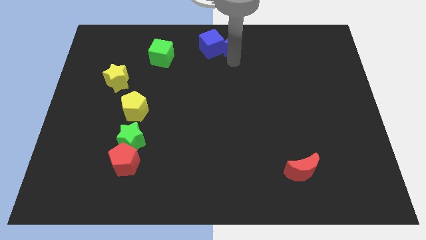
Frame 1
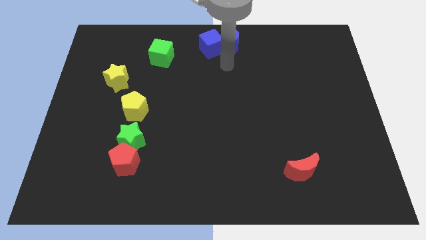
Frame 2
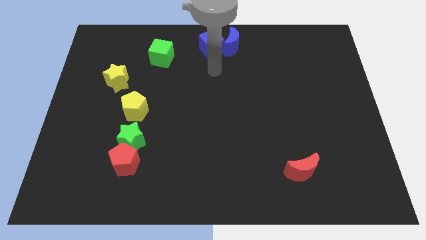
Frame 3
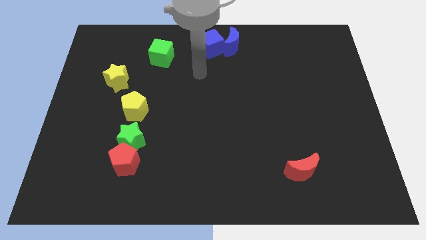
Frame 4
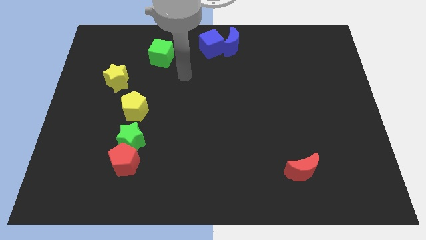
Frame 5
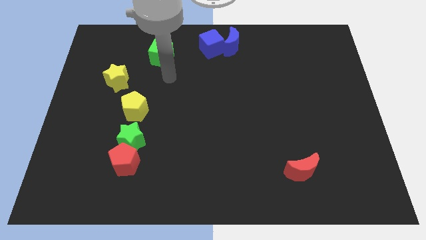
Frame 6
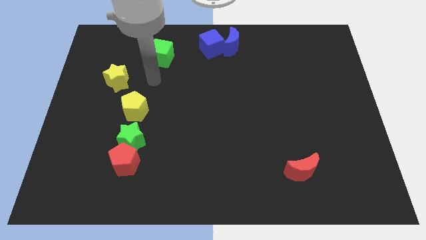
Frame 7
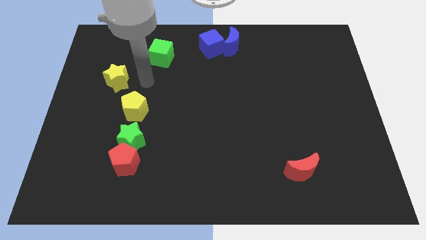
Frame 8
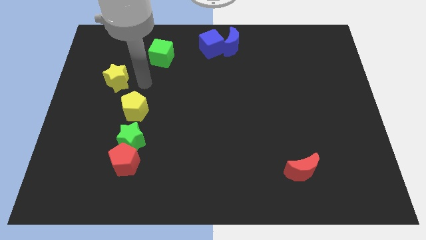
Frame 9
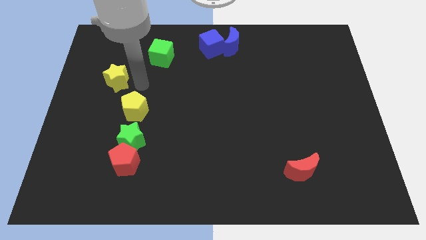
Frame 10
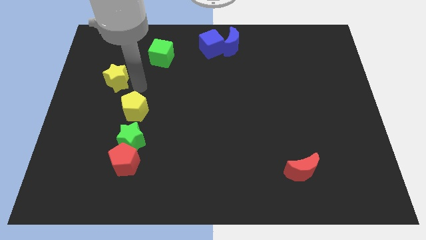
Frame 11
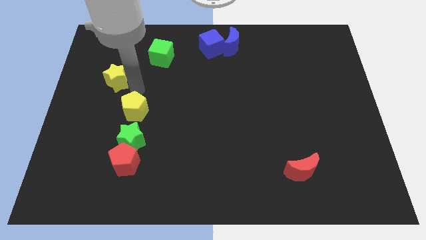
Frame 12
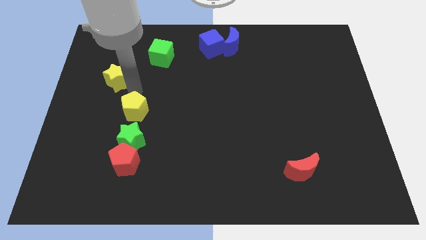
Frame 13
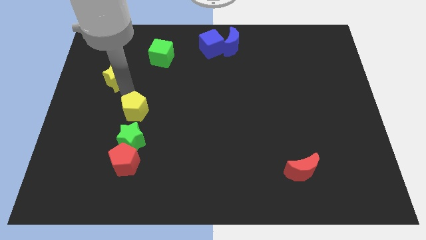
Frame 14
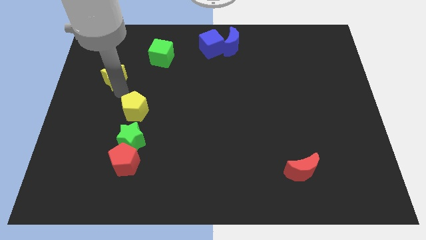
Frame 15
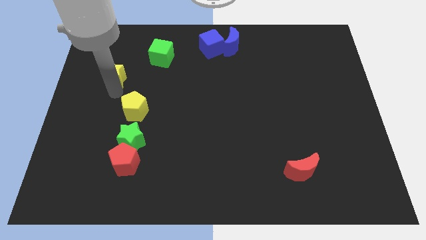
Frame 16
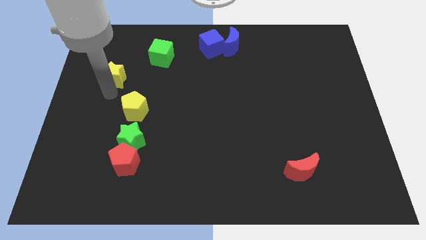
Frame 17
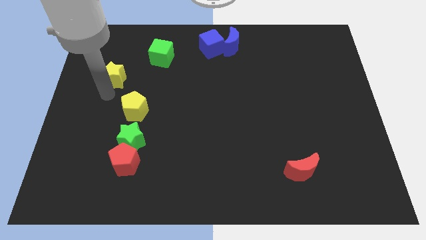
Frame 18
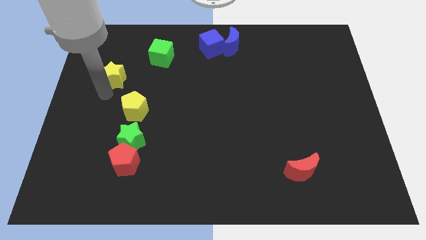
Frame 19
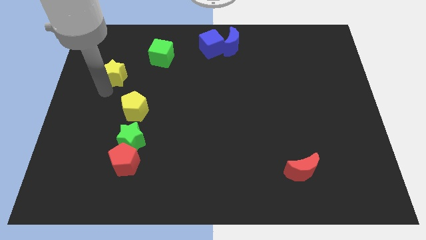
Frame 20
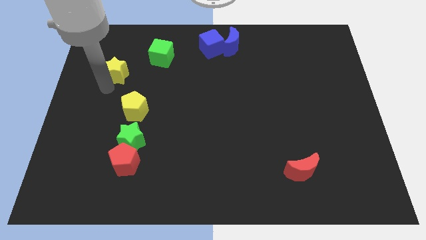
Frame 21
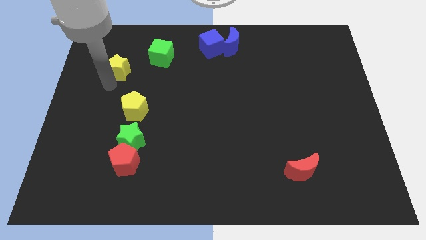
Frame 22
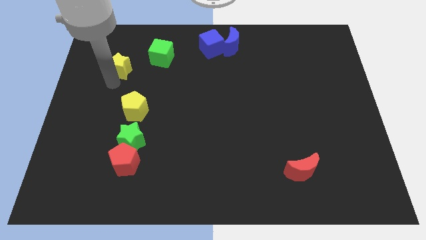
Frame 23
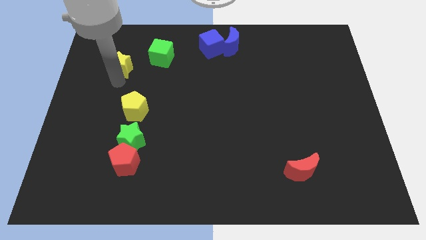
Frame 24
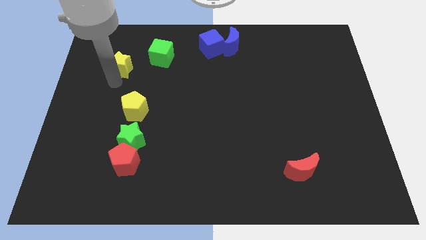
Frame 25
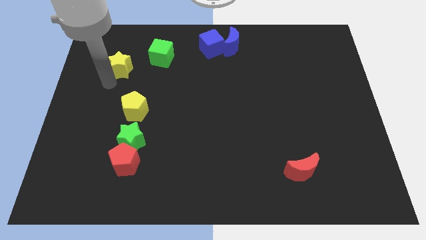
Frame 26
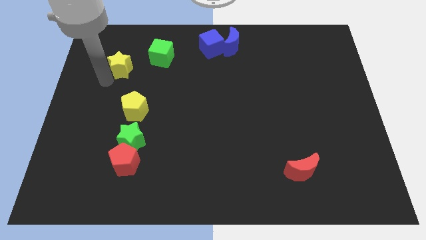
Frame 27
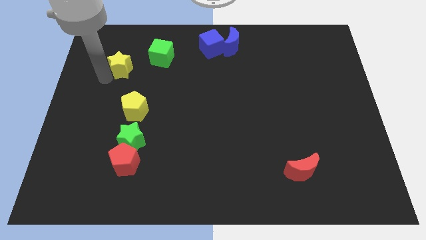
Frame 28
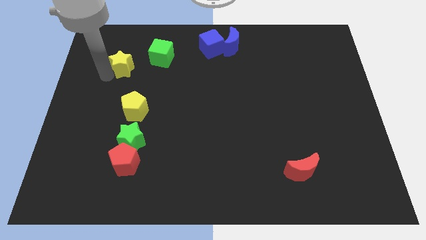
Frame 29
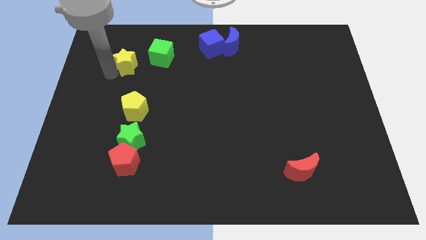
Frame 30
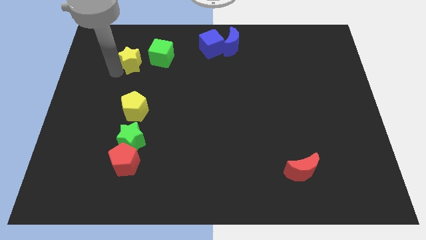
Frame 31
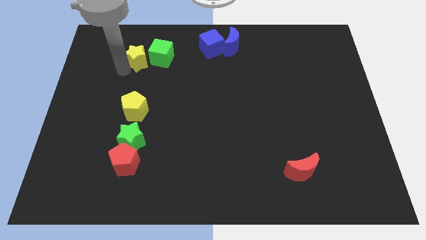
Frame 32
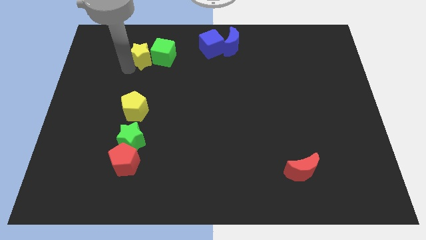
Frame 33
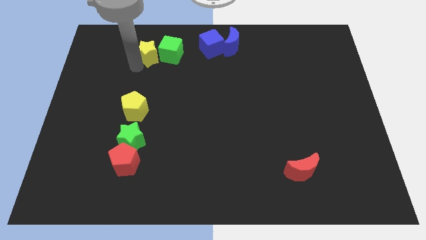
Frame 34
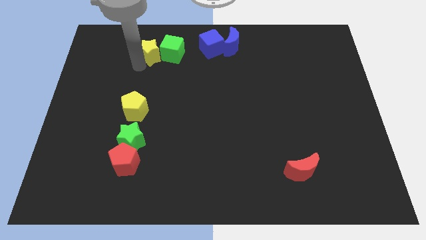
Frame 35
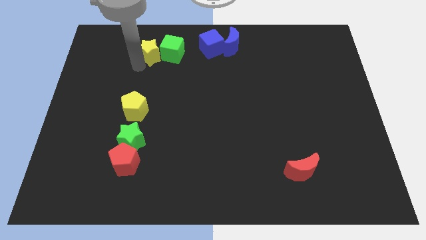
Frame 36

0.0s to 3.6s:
place yellow star towards left of green square

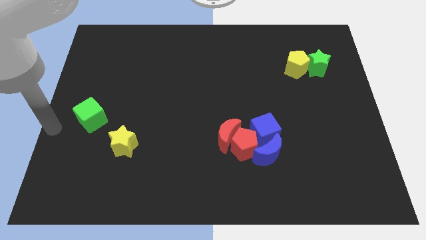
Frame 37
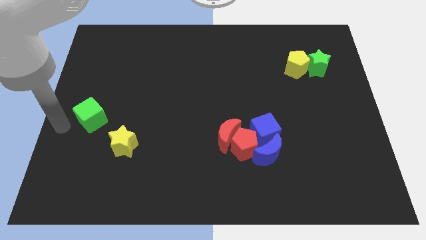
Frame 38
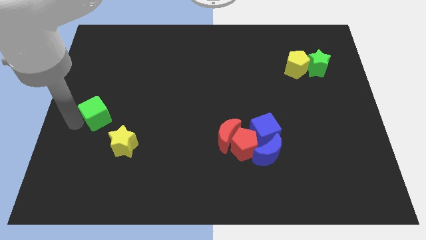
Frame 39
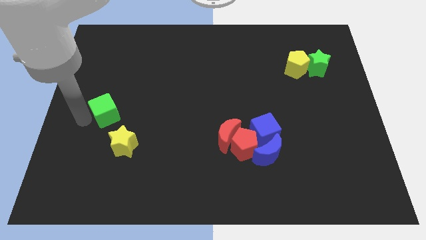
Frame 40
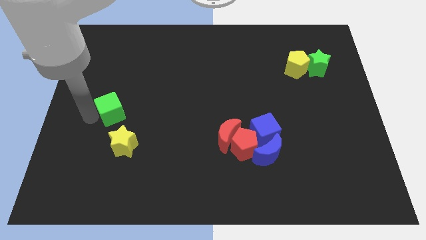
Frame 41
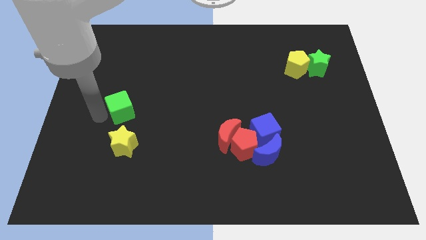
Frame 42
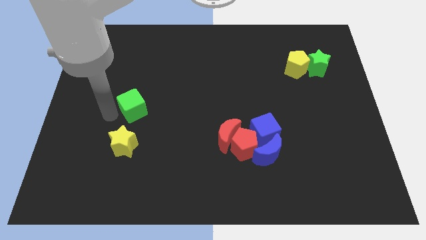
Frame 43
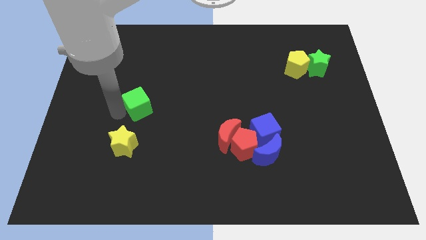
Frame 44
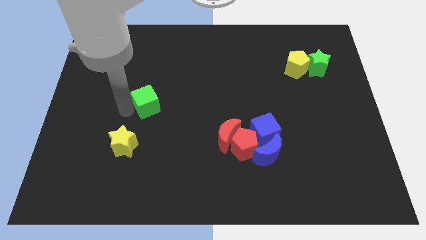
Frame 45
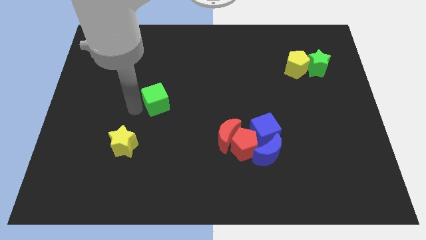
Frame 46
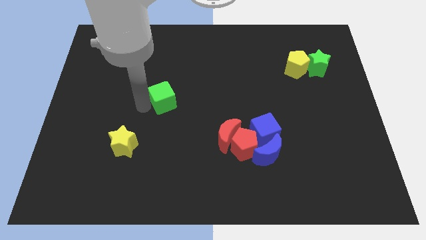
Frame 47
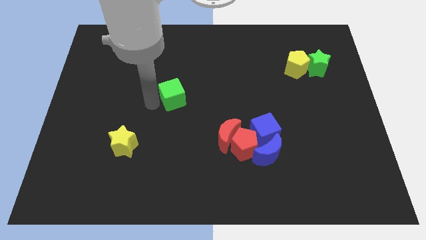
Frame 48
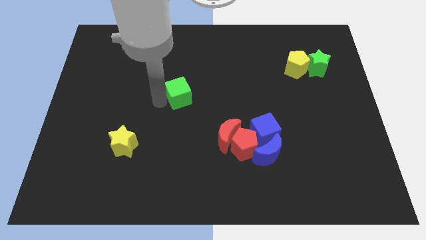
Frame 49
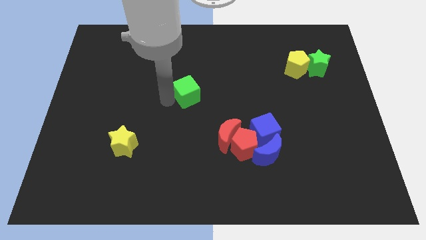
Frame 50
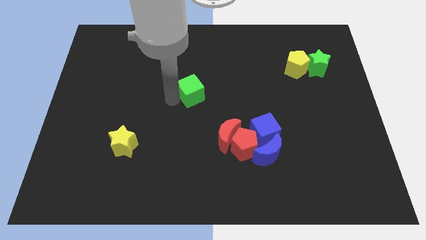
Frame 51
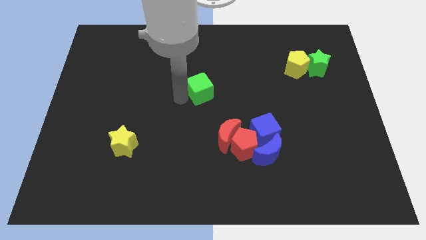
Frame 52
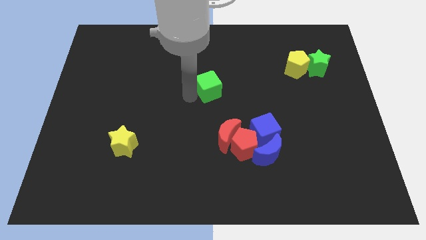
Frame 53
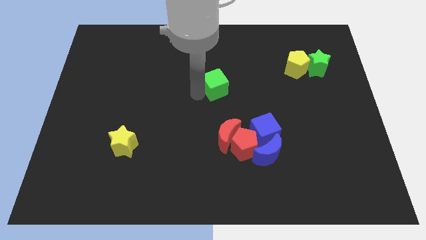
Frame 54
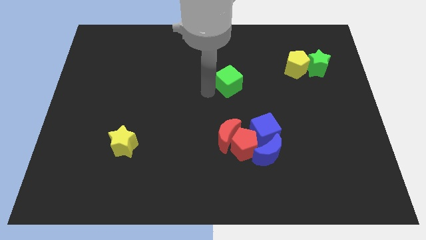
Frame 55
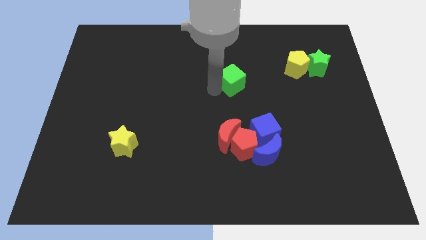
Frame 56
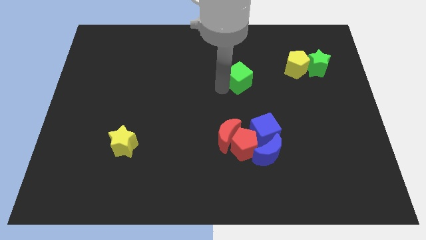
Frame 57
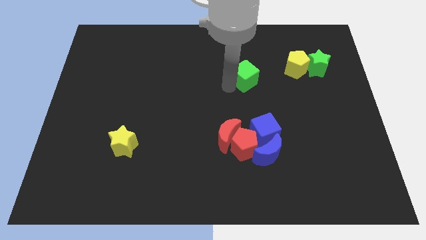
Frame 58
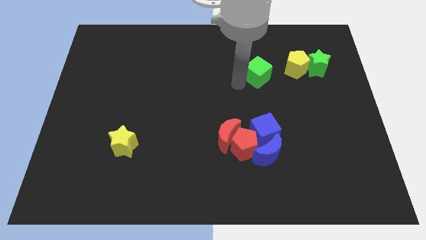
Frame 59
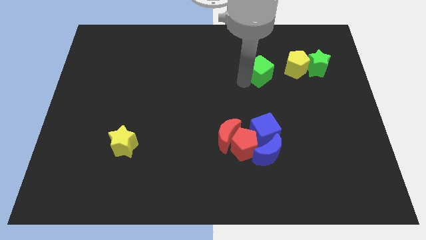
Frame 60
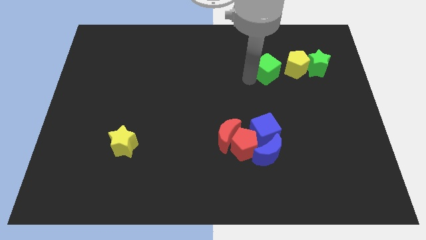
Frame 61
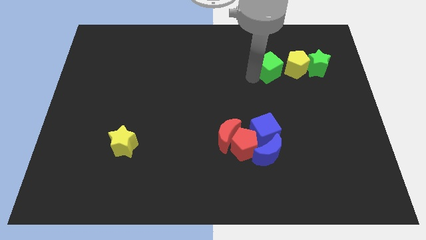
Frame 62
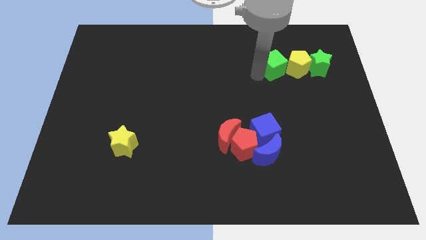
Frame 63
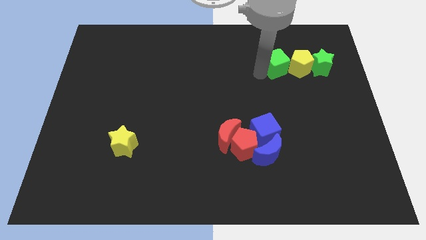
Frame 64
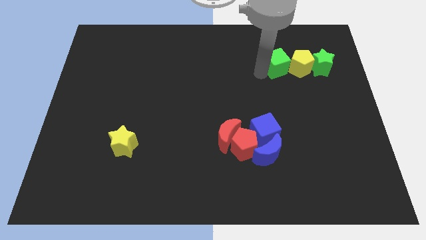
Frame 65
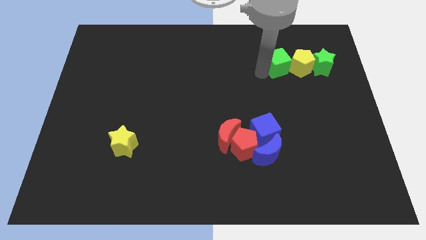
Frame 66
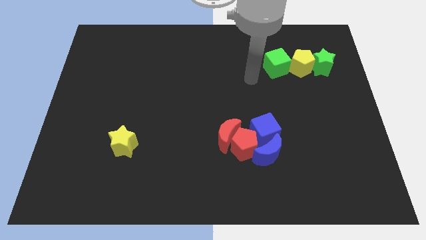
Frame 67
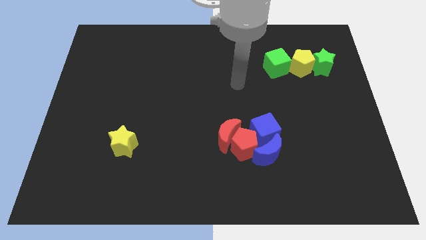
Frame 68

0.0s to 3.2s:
push the green cube into yellow pentagon

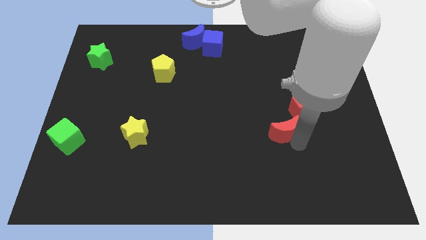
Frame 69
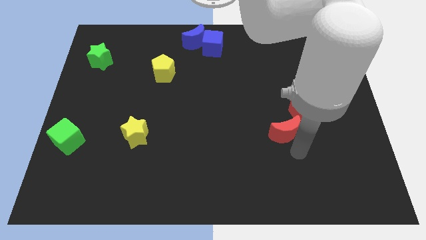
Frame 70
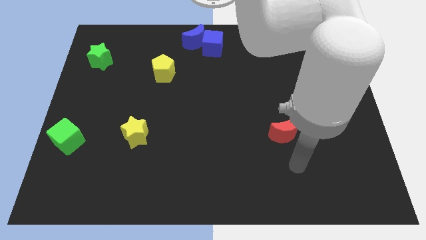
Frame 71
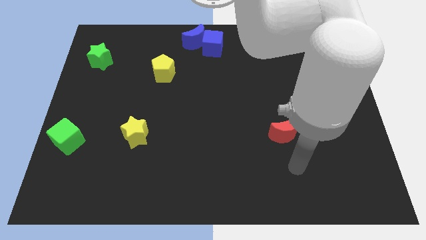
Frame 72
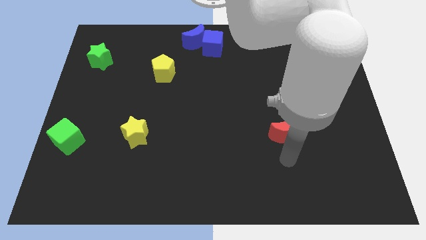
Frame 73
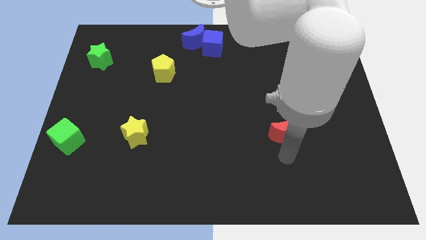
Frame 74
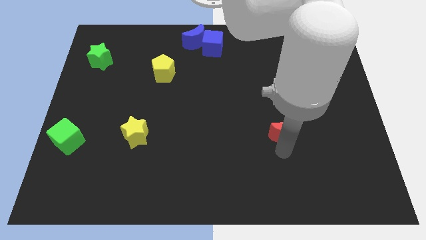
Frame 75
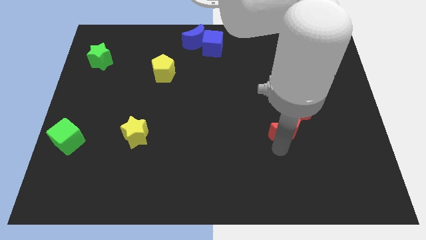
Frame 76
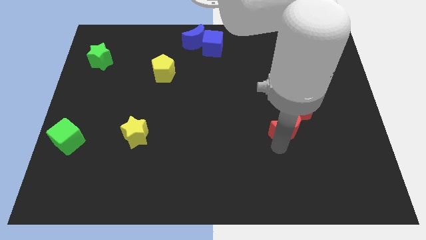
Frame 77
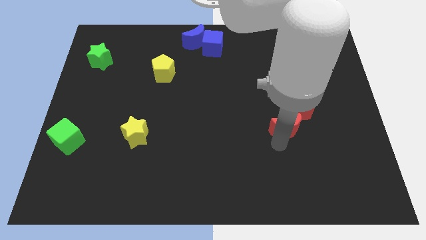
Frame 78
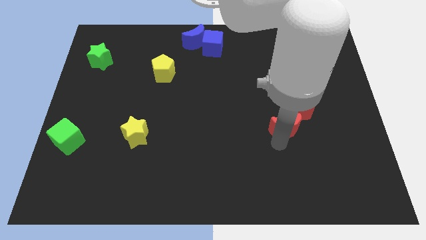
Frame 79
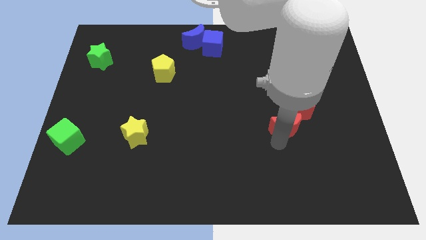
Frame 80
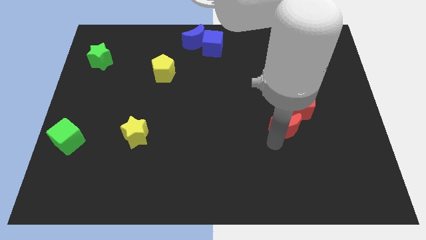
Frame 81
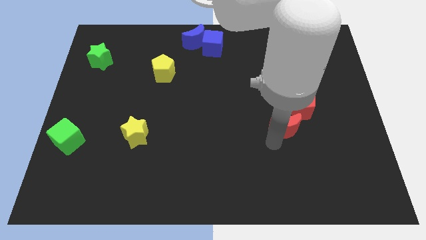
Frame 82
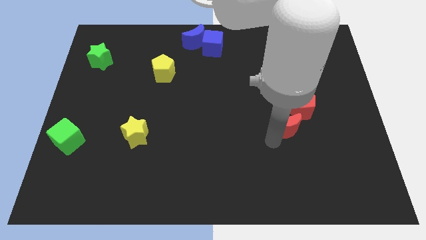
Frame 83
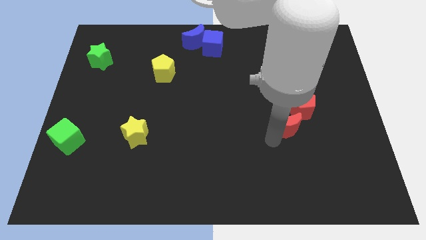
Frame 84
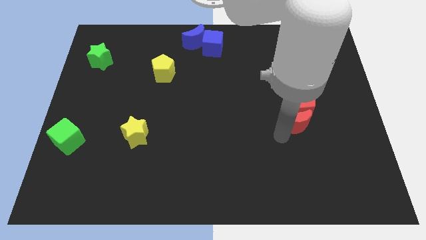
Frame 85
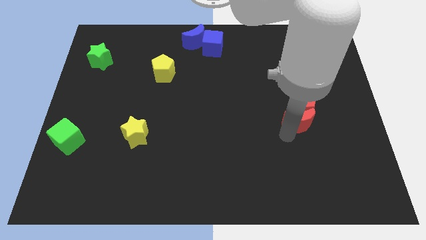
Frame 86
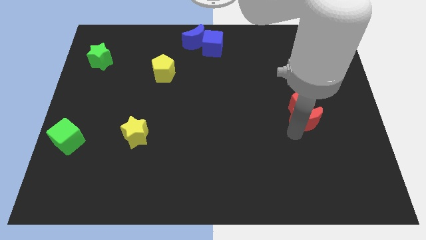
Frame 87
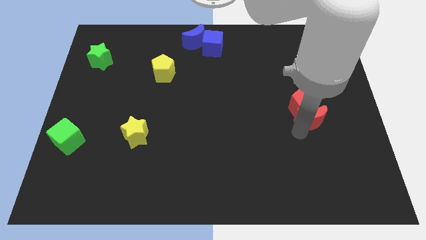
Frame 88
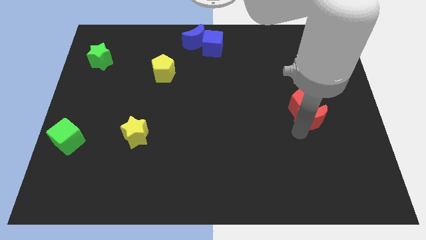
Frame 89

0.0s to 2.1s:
move the red crescent into the red pentagon

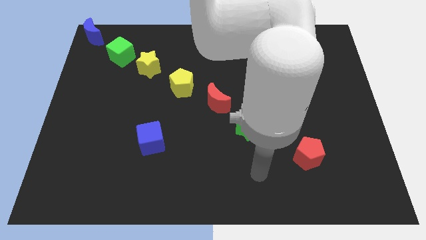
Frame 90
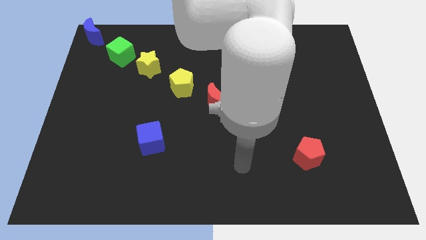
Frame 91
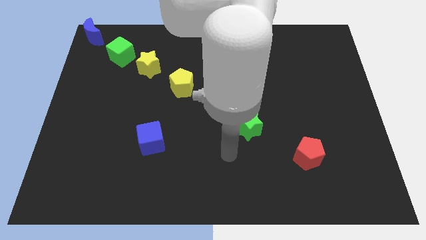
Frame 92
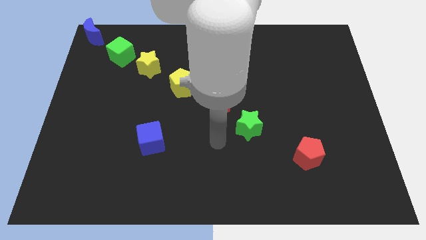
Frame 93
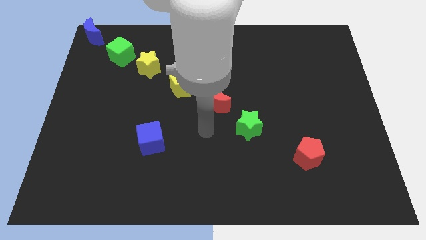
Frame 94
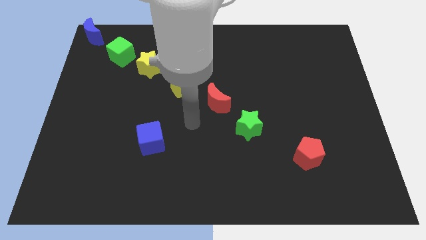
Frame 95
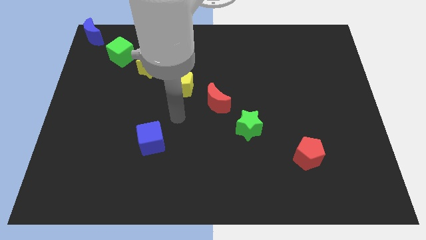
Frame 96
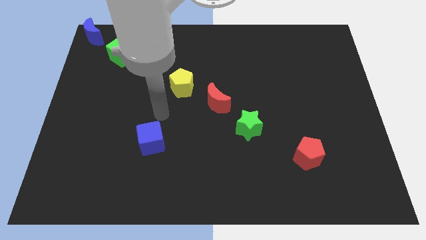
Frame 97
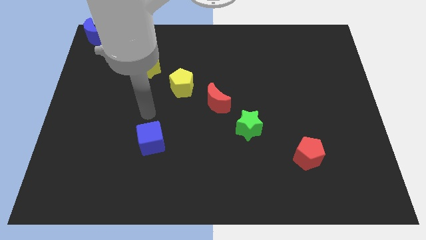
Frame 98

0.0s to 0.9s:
push the arm to the top of blue cube
